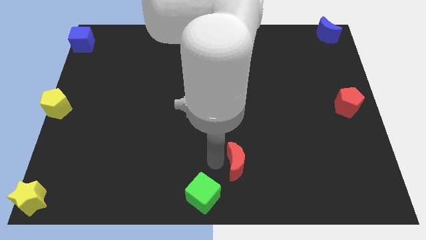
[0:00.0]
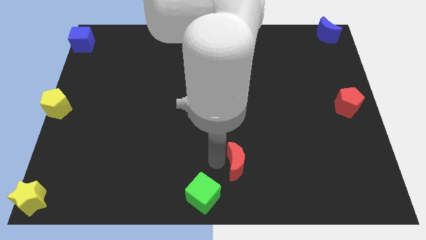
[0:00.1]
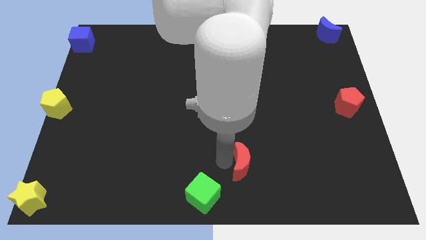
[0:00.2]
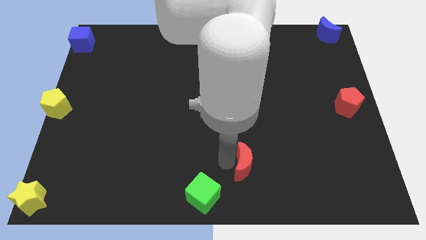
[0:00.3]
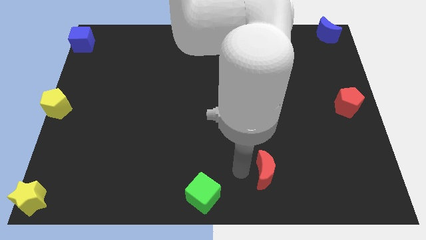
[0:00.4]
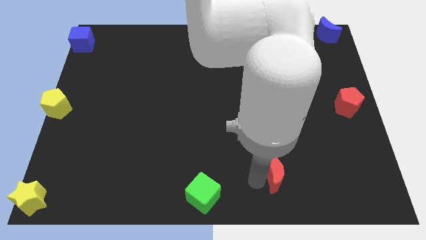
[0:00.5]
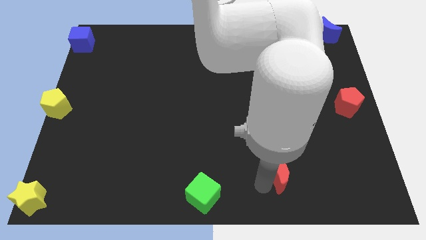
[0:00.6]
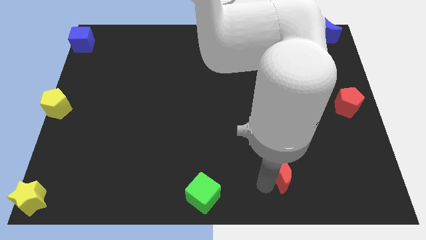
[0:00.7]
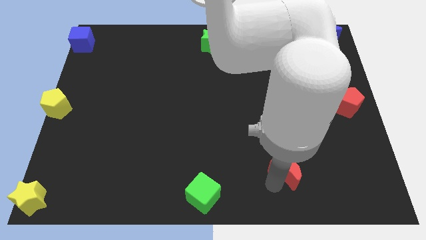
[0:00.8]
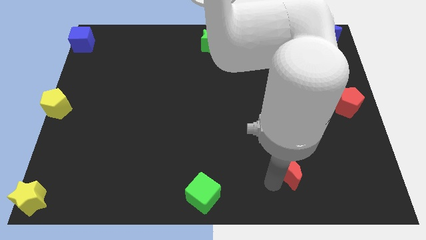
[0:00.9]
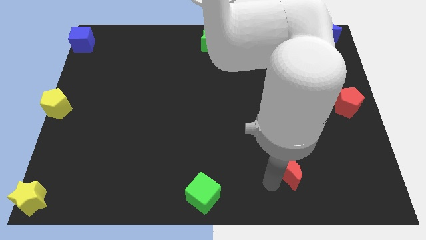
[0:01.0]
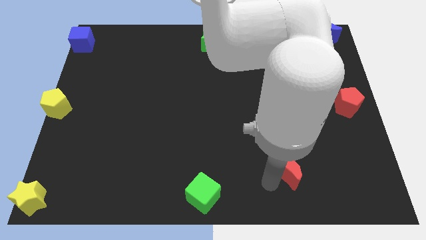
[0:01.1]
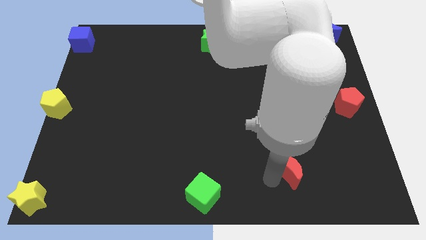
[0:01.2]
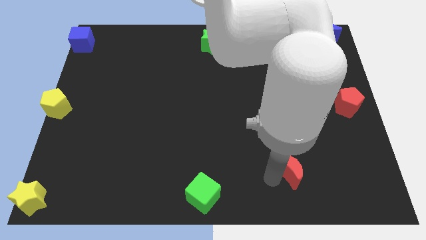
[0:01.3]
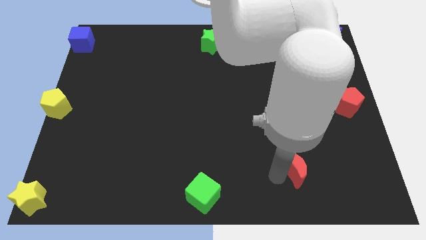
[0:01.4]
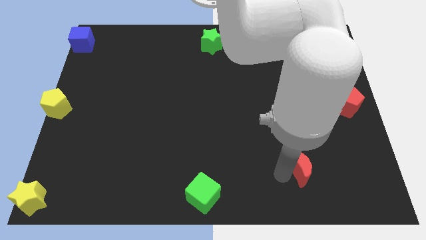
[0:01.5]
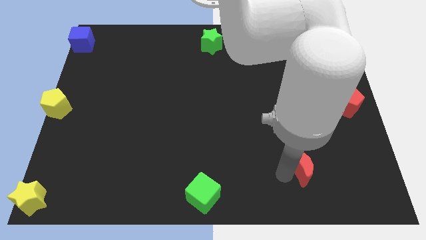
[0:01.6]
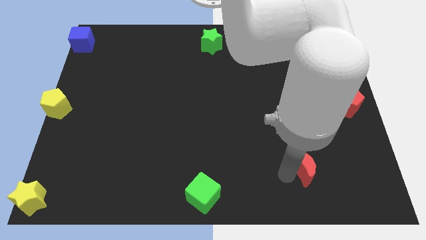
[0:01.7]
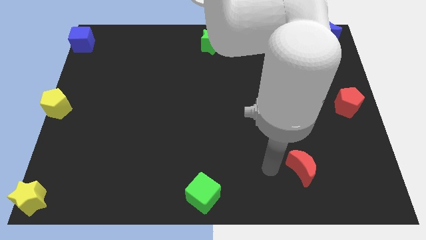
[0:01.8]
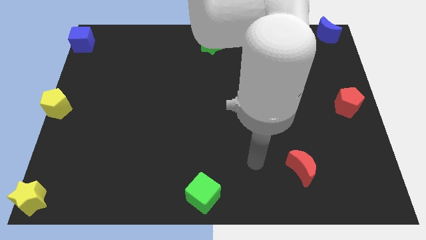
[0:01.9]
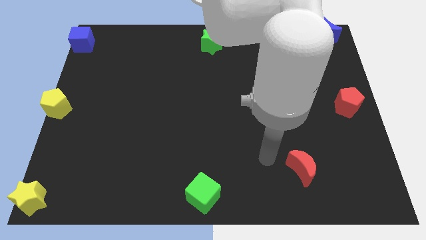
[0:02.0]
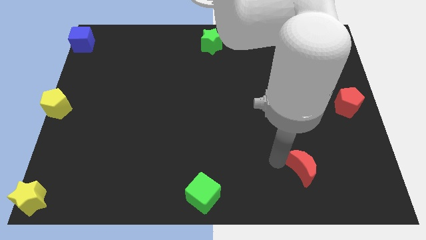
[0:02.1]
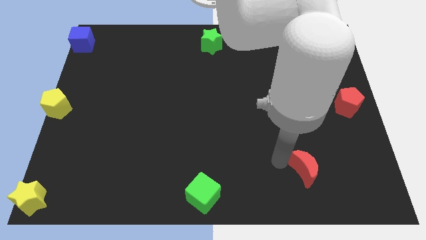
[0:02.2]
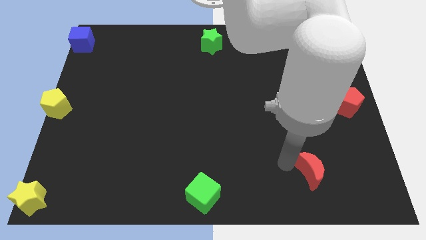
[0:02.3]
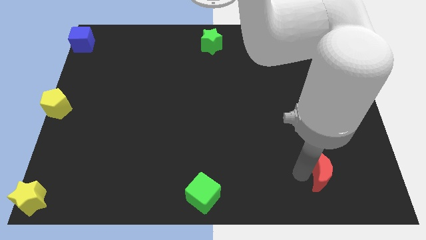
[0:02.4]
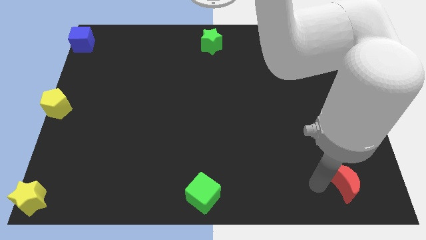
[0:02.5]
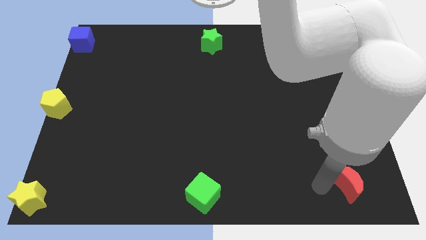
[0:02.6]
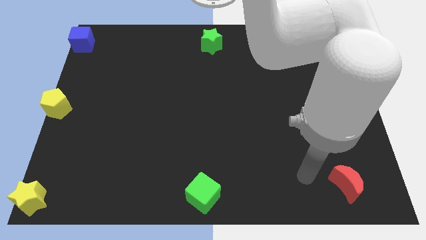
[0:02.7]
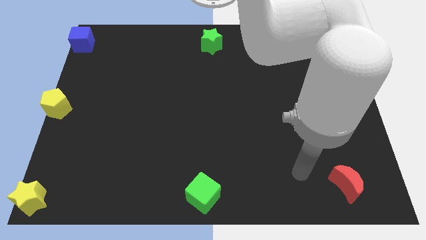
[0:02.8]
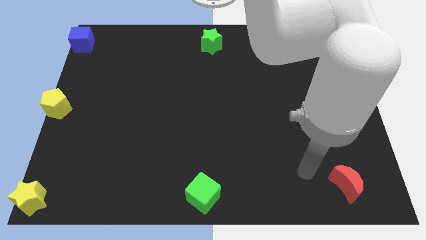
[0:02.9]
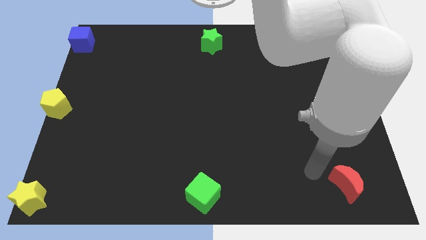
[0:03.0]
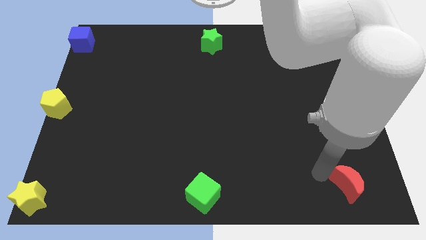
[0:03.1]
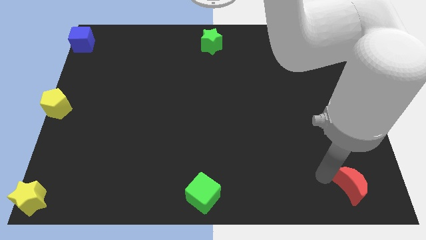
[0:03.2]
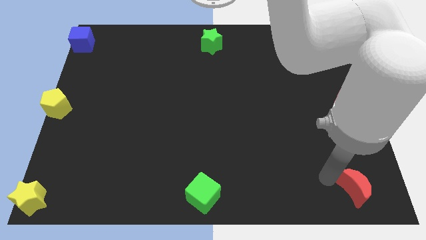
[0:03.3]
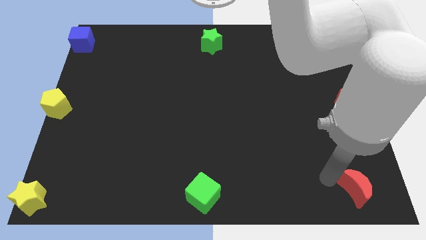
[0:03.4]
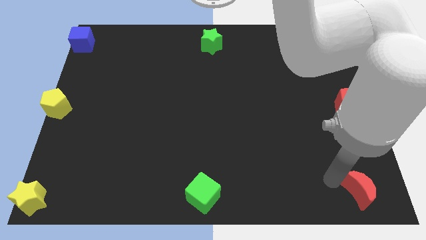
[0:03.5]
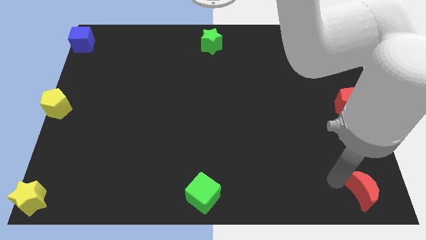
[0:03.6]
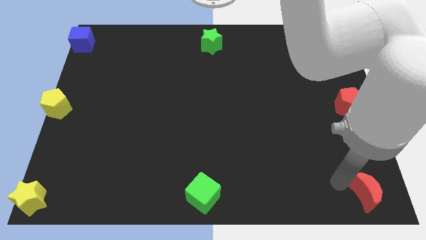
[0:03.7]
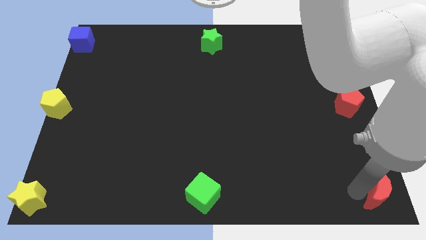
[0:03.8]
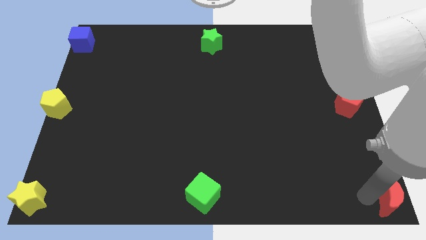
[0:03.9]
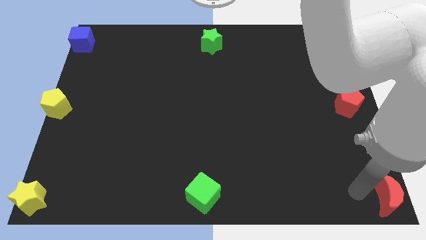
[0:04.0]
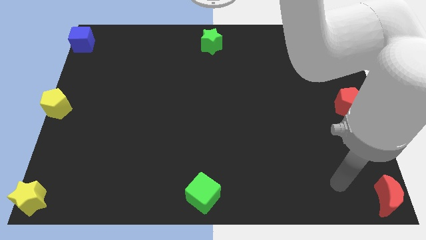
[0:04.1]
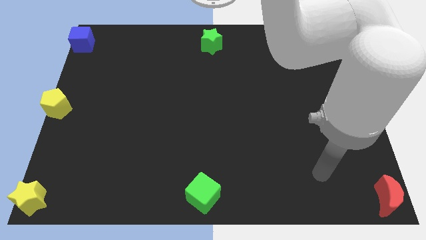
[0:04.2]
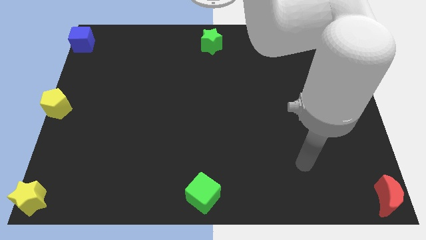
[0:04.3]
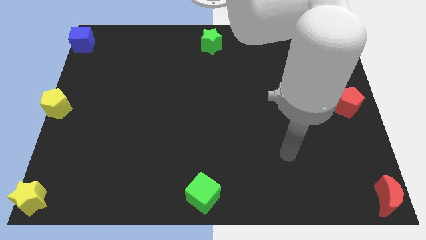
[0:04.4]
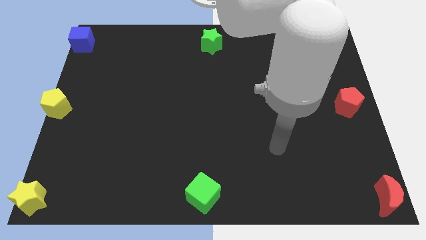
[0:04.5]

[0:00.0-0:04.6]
push the red moon to the bottom right corner of the board

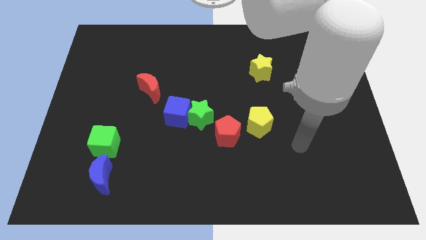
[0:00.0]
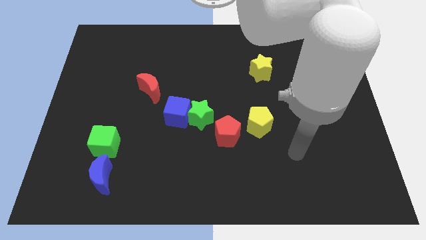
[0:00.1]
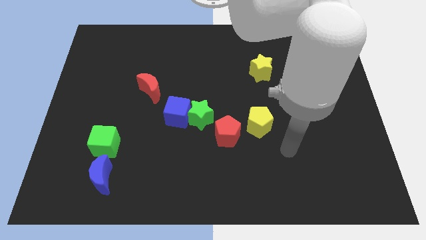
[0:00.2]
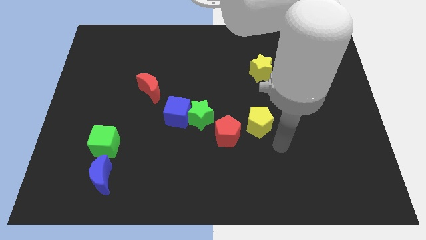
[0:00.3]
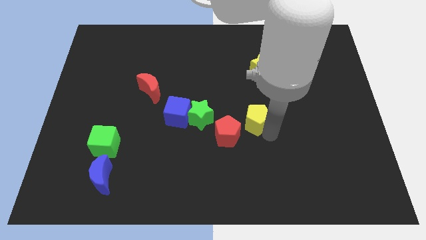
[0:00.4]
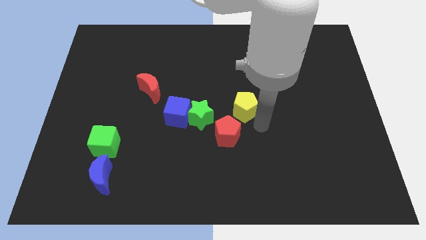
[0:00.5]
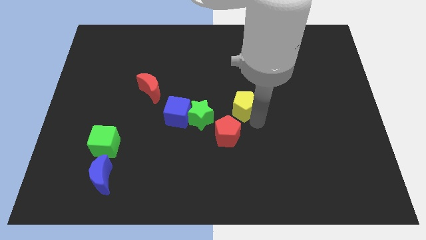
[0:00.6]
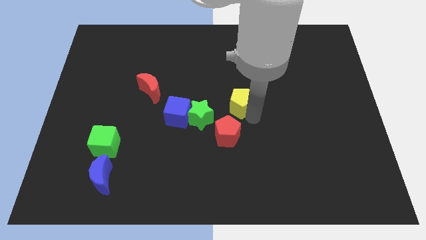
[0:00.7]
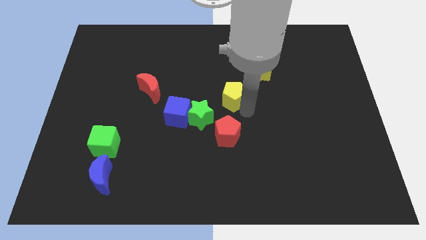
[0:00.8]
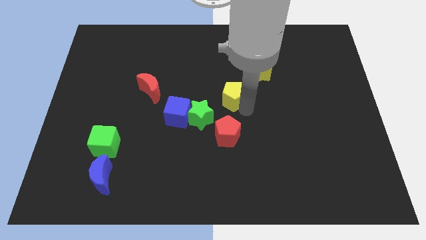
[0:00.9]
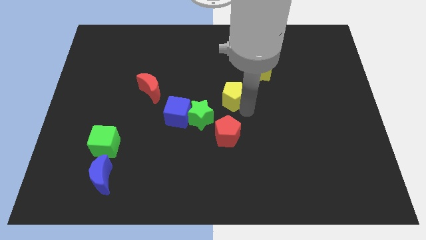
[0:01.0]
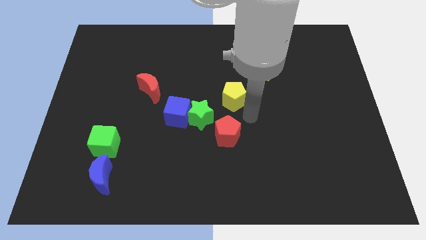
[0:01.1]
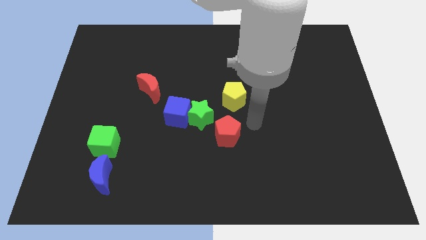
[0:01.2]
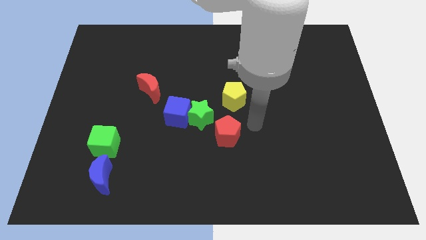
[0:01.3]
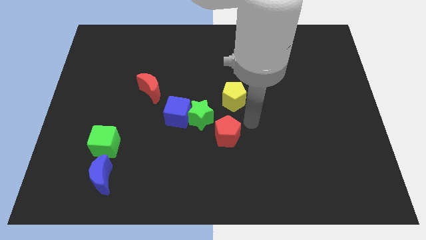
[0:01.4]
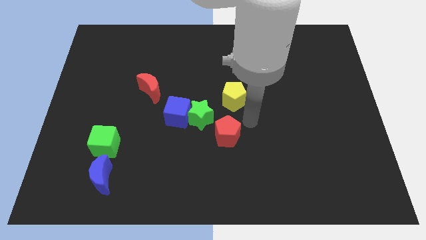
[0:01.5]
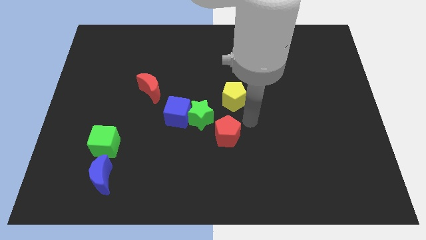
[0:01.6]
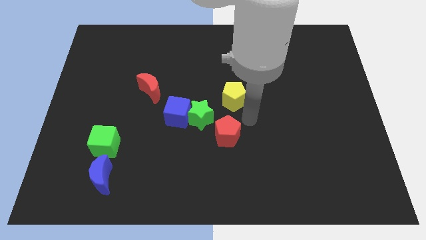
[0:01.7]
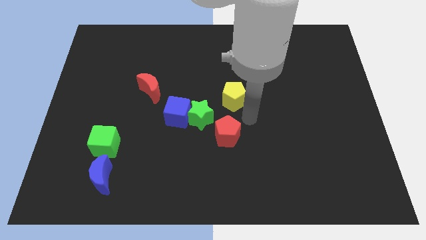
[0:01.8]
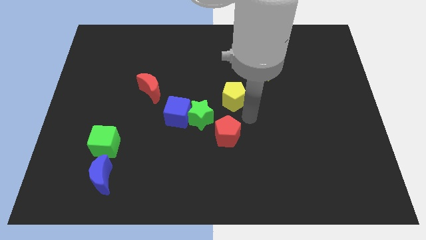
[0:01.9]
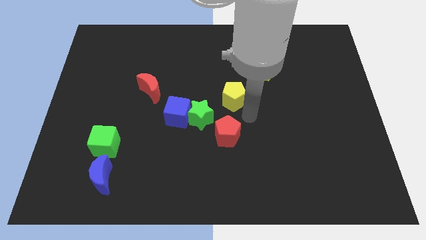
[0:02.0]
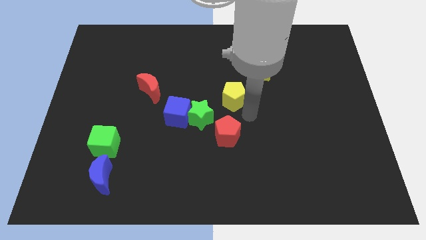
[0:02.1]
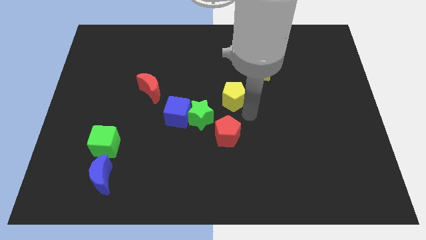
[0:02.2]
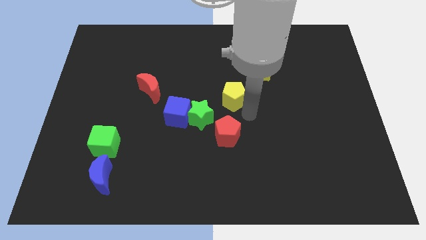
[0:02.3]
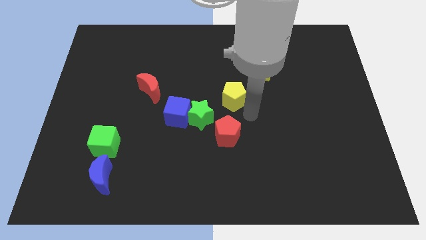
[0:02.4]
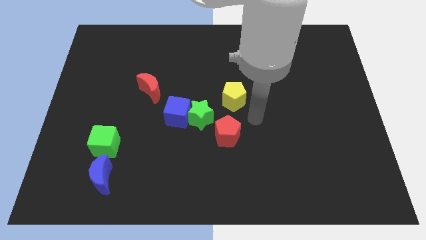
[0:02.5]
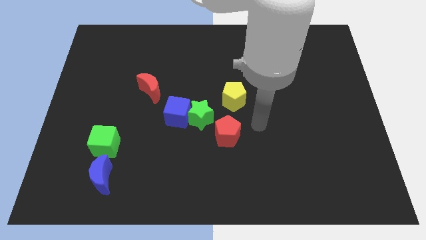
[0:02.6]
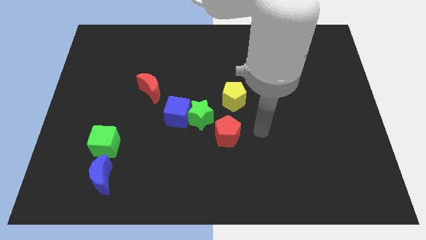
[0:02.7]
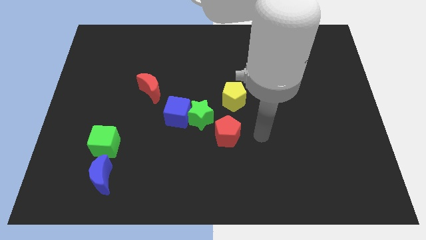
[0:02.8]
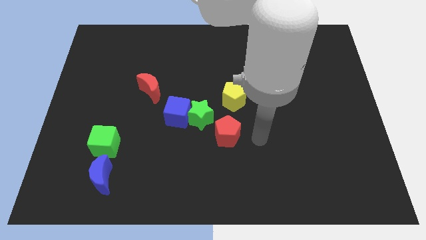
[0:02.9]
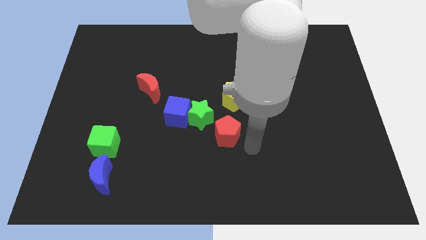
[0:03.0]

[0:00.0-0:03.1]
move the yellow pentagon above the red pentagon

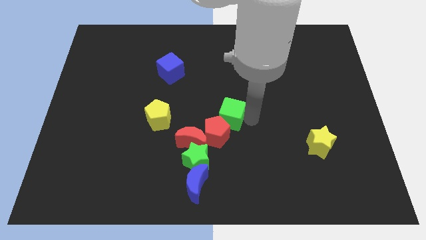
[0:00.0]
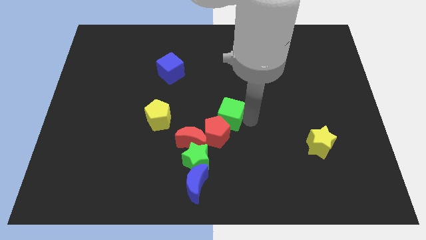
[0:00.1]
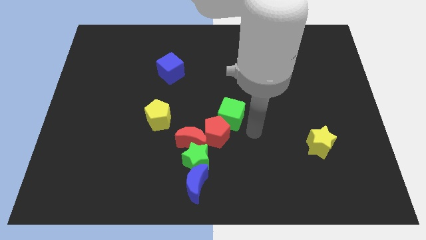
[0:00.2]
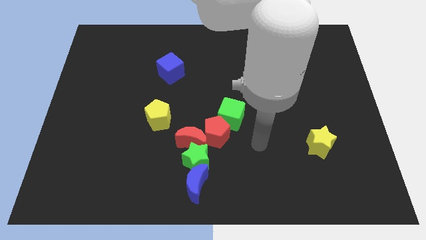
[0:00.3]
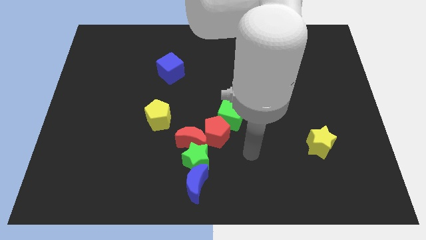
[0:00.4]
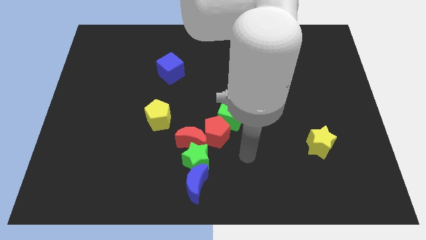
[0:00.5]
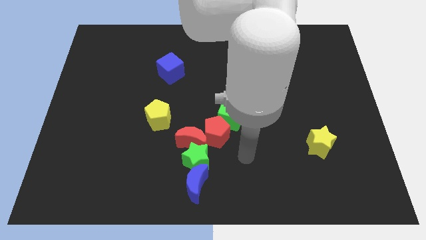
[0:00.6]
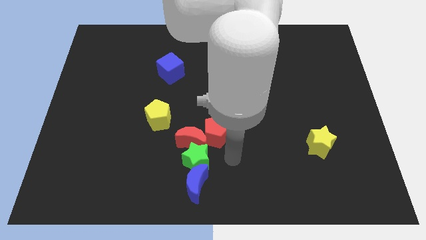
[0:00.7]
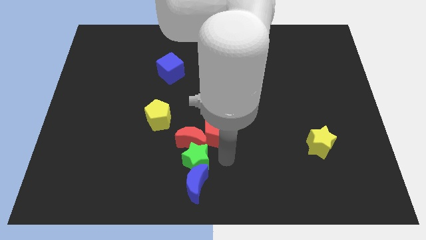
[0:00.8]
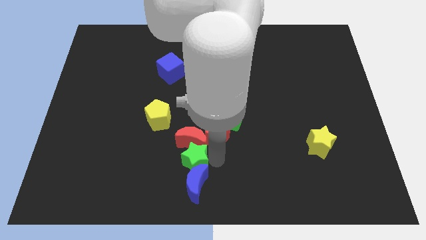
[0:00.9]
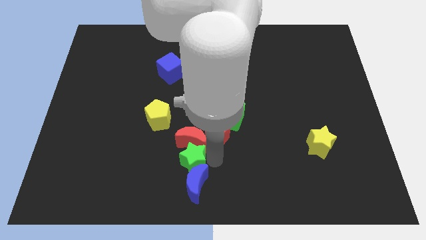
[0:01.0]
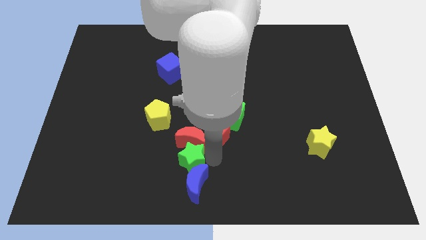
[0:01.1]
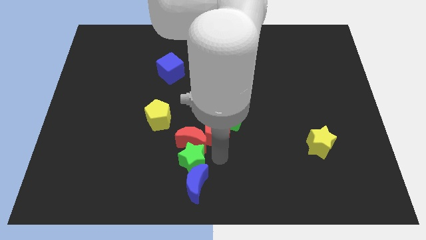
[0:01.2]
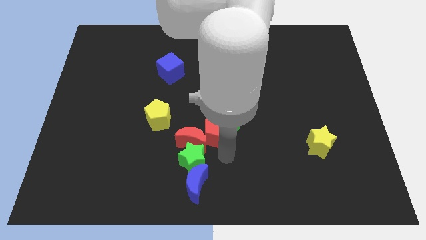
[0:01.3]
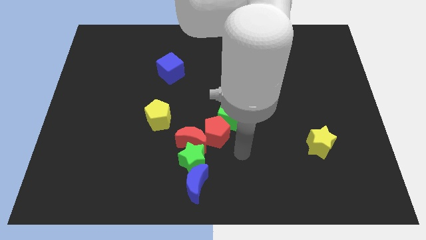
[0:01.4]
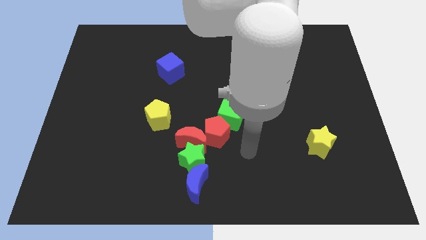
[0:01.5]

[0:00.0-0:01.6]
slightly push the green star to the left
